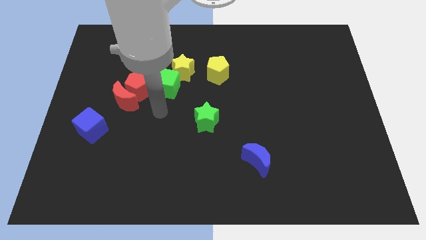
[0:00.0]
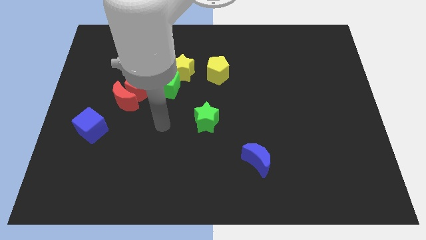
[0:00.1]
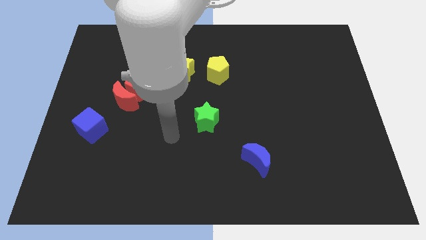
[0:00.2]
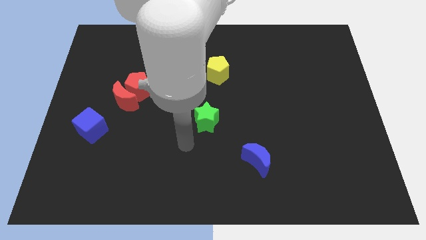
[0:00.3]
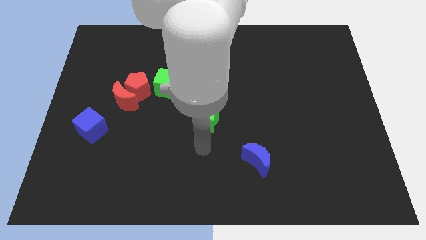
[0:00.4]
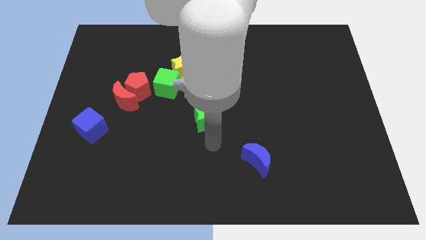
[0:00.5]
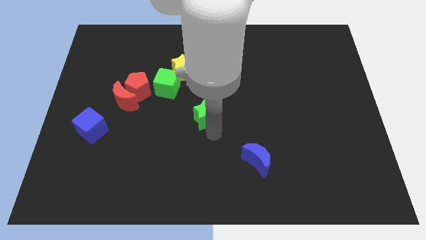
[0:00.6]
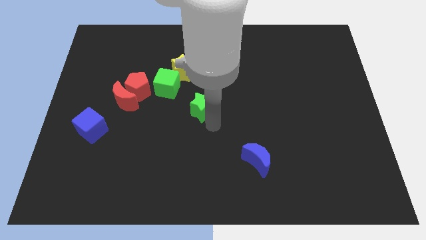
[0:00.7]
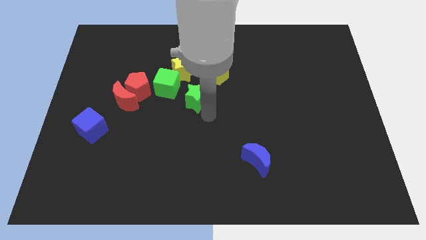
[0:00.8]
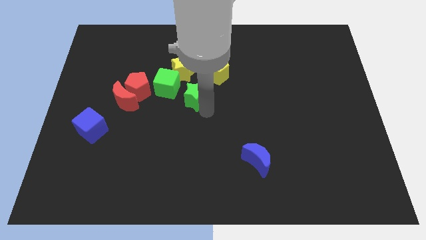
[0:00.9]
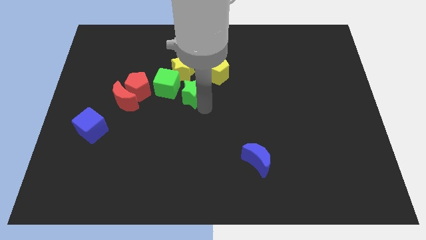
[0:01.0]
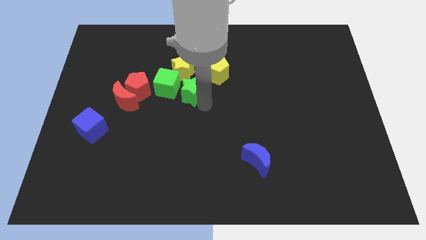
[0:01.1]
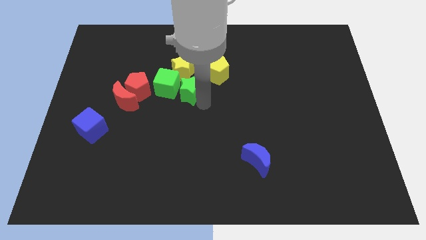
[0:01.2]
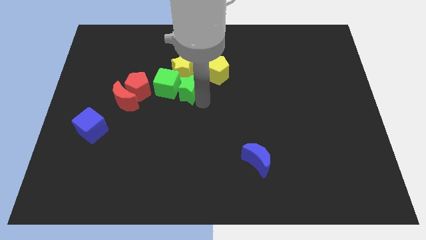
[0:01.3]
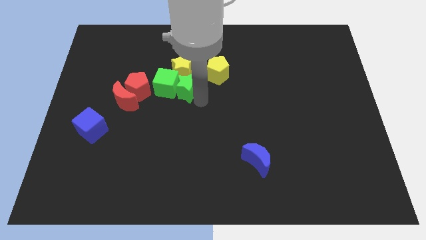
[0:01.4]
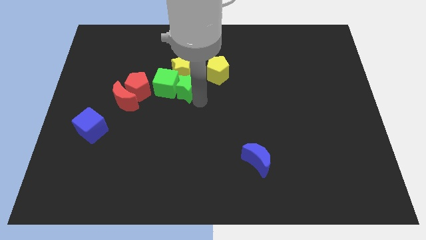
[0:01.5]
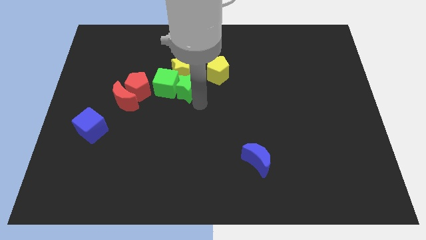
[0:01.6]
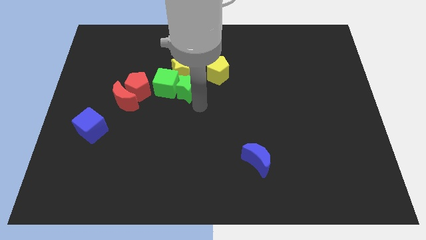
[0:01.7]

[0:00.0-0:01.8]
move the green star to the right of the green cube

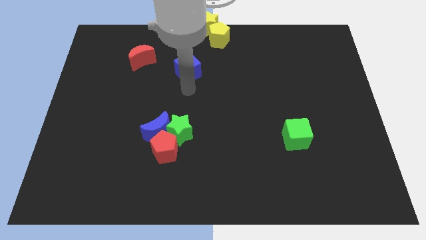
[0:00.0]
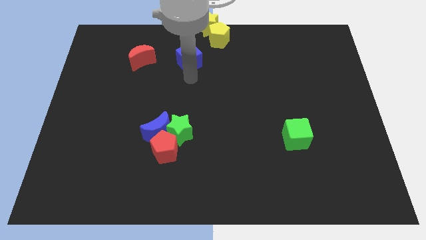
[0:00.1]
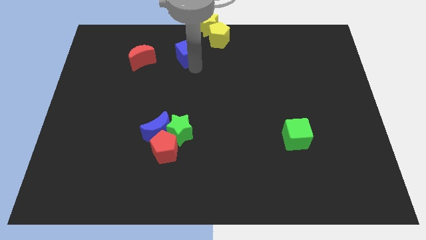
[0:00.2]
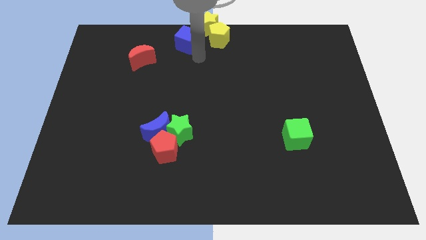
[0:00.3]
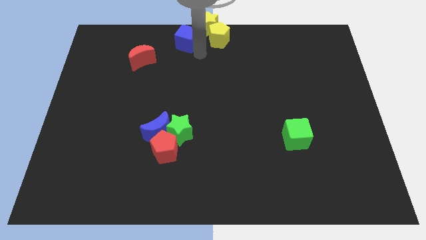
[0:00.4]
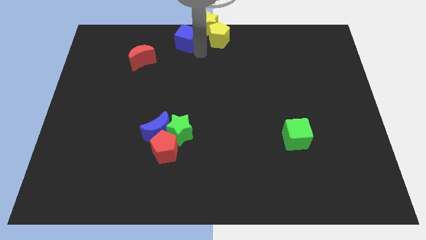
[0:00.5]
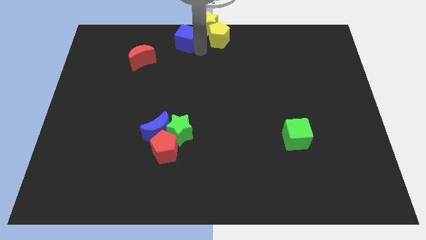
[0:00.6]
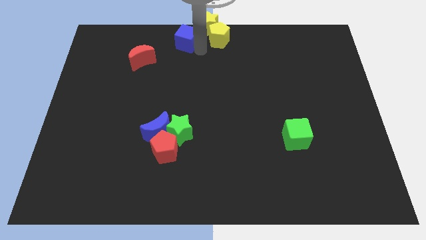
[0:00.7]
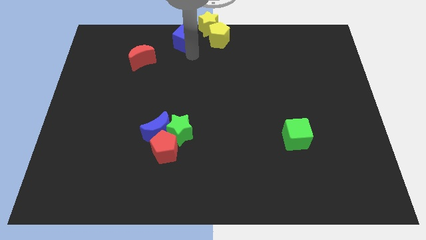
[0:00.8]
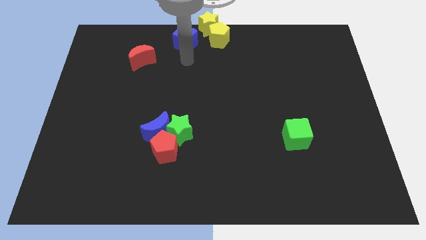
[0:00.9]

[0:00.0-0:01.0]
place the blue cube close to yellow blocks

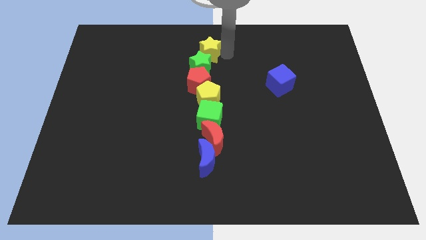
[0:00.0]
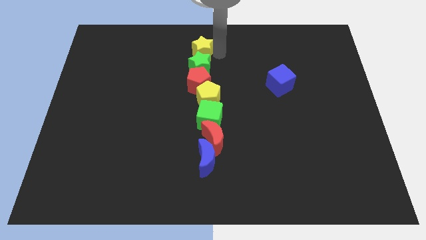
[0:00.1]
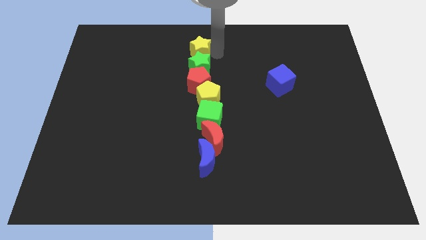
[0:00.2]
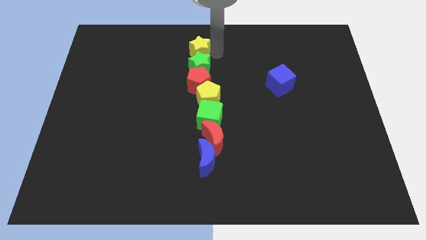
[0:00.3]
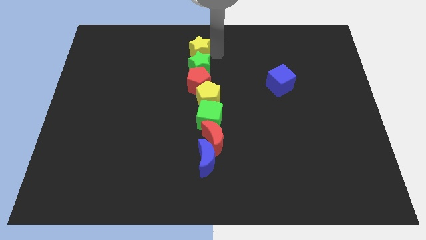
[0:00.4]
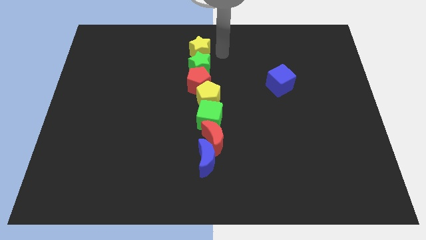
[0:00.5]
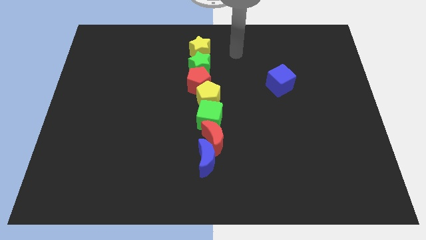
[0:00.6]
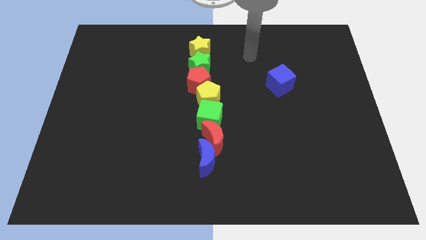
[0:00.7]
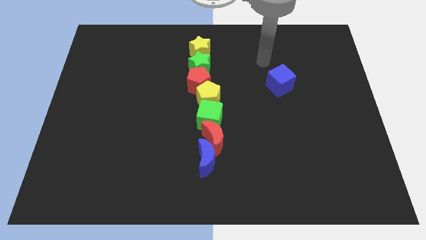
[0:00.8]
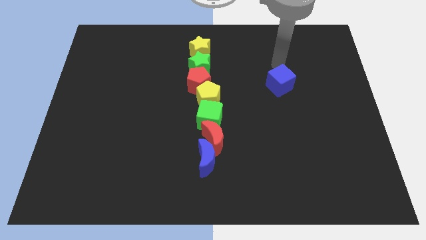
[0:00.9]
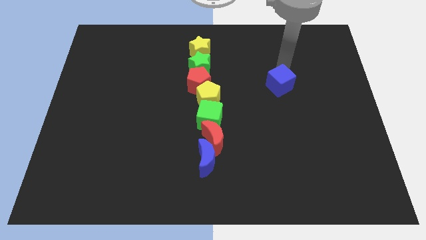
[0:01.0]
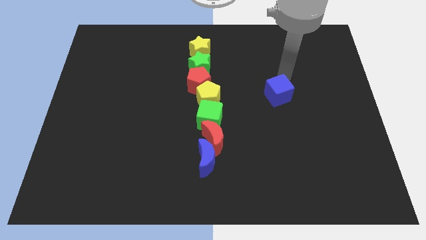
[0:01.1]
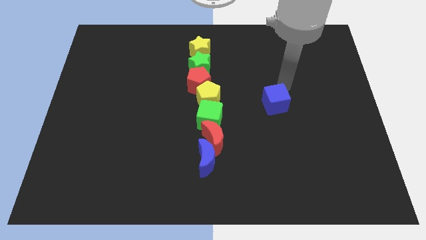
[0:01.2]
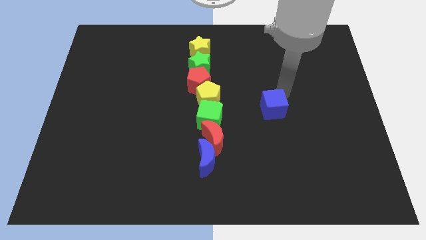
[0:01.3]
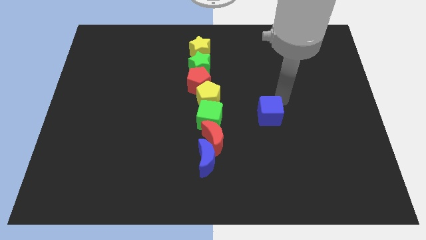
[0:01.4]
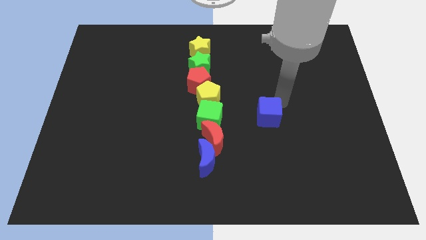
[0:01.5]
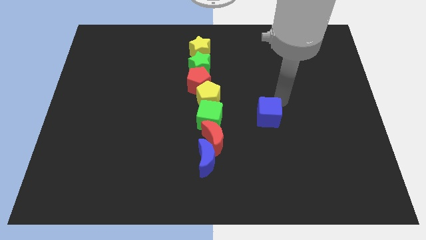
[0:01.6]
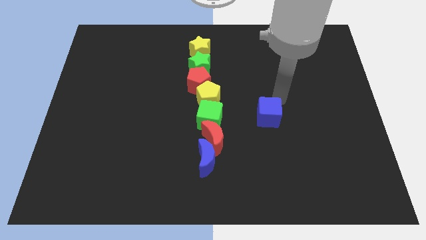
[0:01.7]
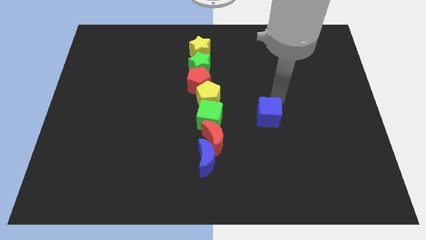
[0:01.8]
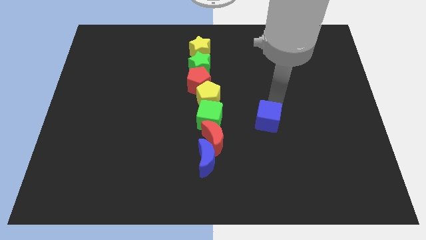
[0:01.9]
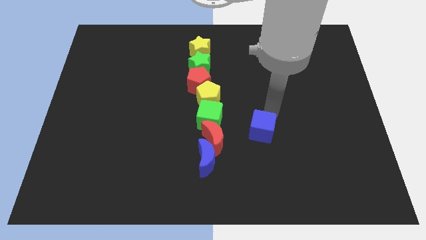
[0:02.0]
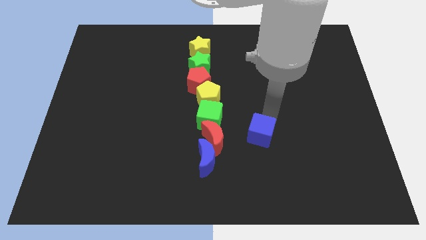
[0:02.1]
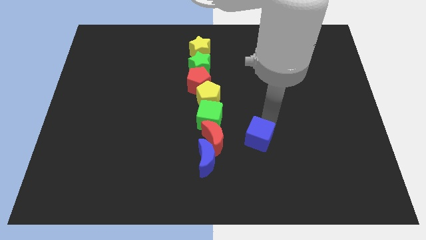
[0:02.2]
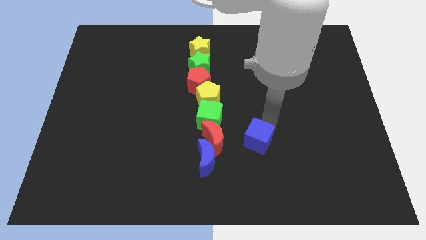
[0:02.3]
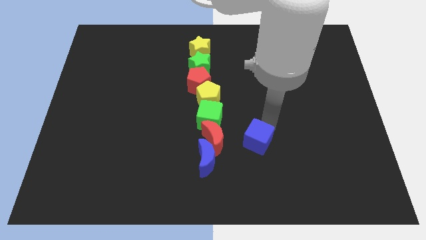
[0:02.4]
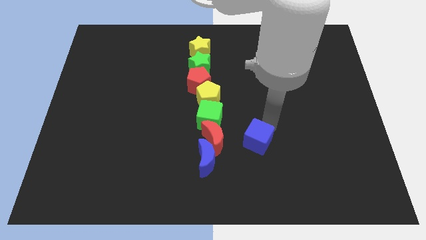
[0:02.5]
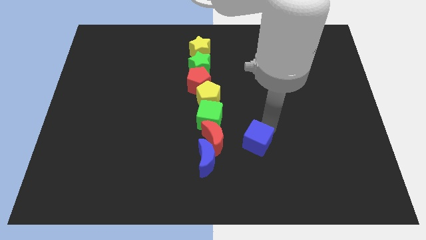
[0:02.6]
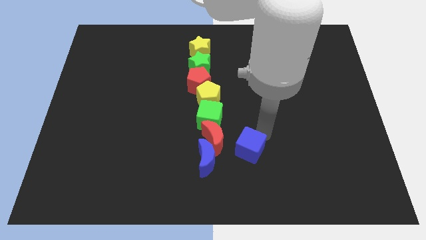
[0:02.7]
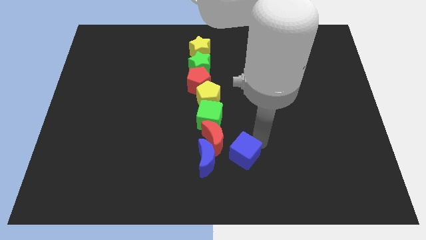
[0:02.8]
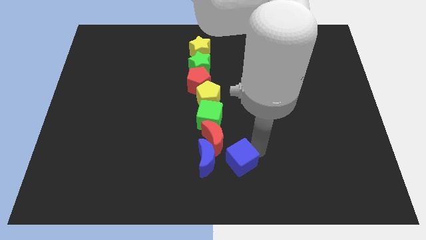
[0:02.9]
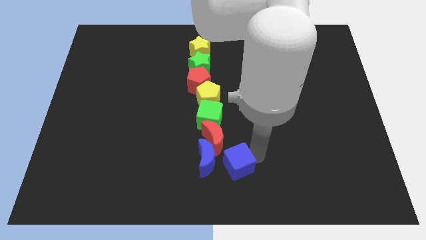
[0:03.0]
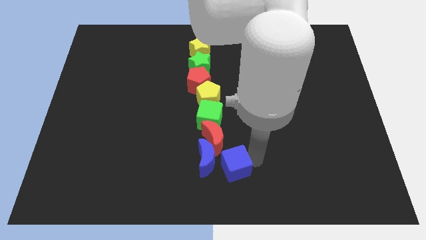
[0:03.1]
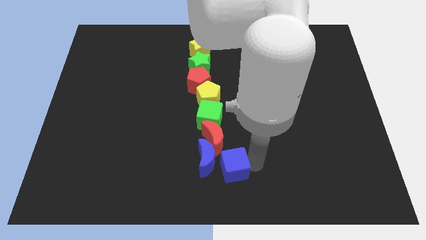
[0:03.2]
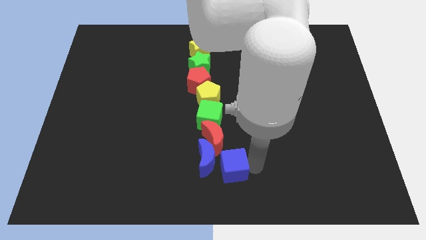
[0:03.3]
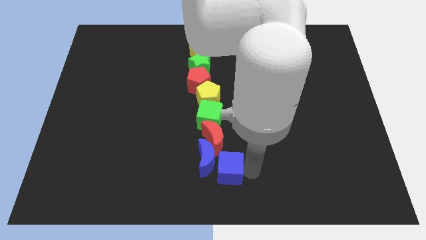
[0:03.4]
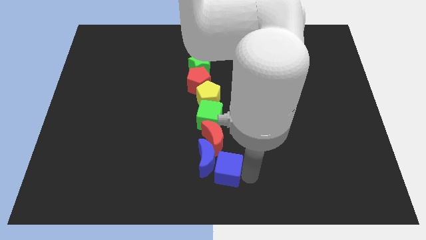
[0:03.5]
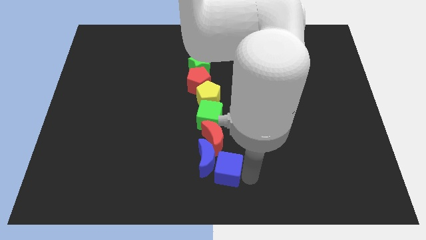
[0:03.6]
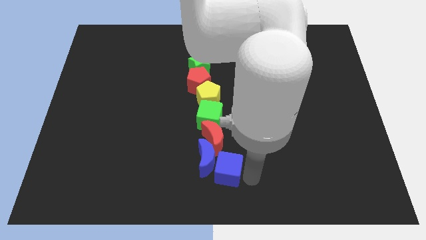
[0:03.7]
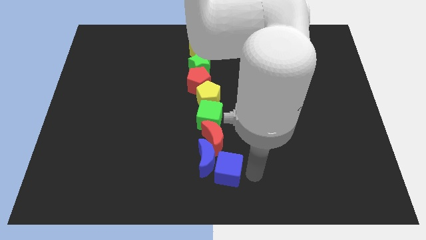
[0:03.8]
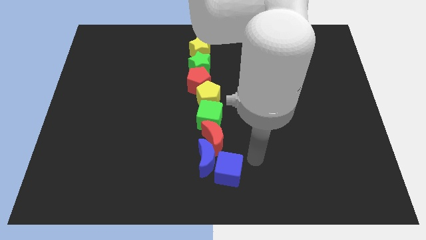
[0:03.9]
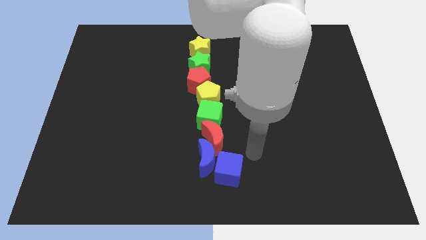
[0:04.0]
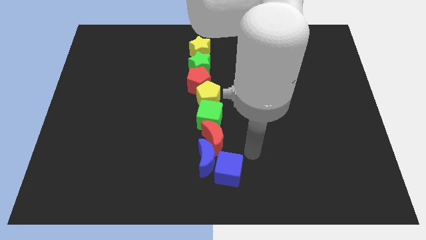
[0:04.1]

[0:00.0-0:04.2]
drag the blue cube right to the blue moon

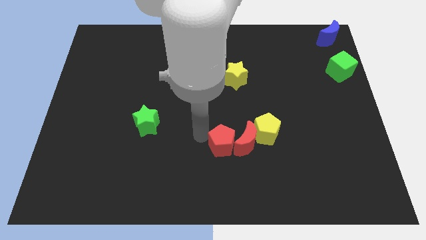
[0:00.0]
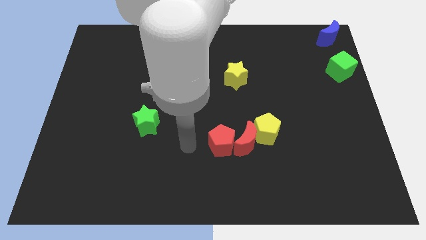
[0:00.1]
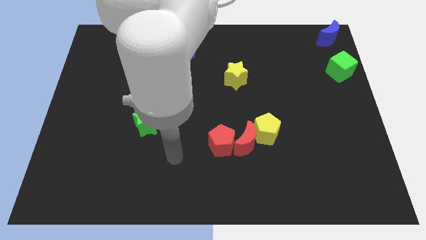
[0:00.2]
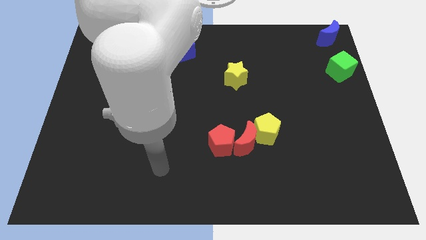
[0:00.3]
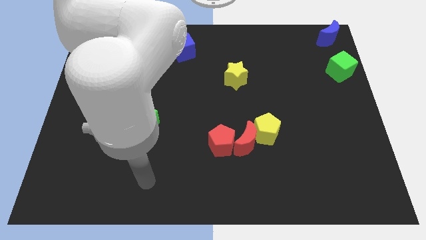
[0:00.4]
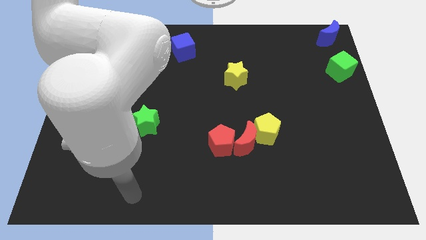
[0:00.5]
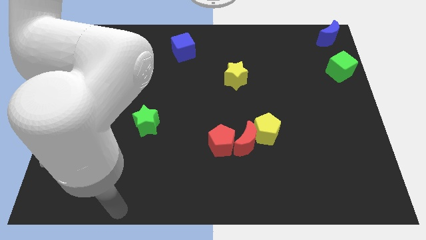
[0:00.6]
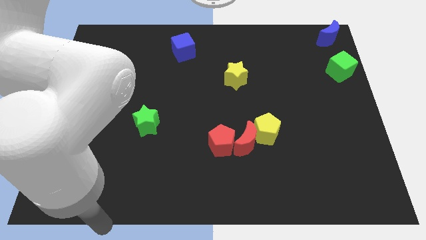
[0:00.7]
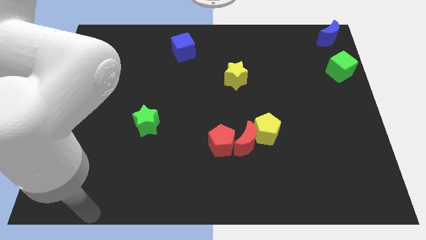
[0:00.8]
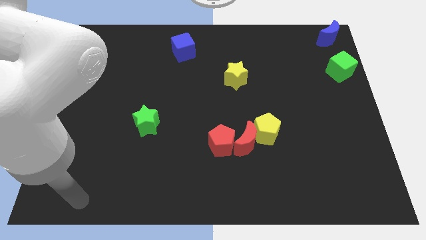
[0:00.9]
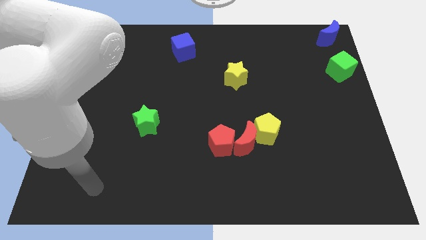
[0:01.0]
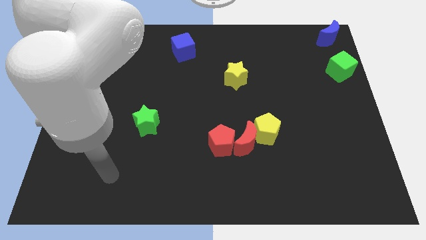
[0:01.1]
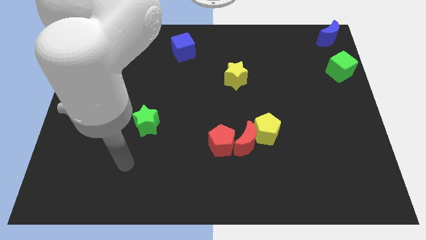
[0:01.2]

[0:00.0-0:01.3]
move your arm away from the red blocks

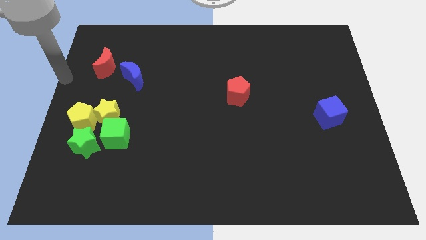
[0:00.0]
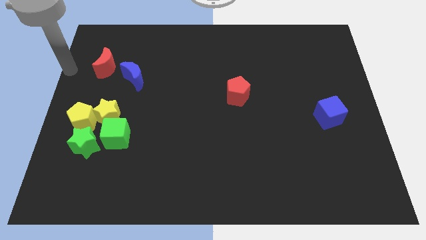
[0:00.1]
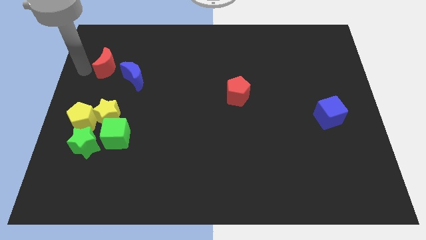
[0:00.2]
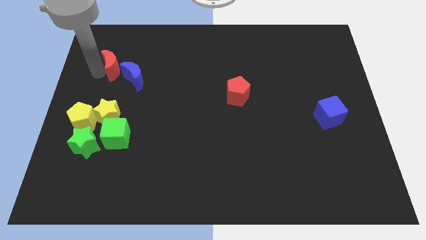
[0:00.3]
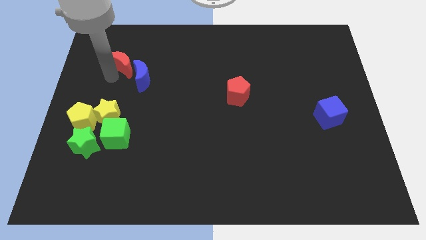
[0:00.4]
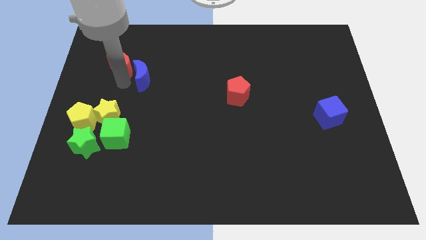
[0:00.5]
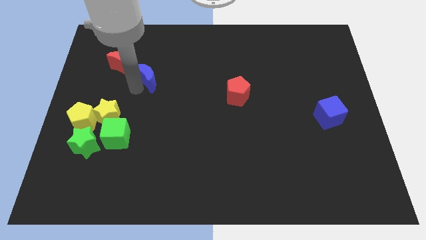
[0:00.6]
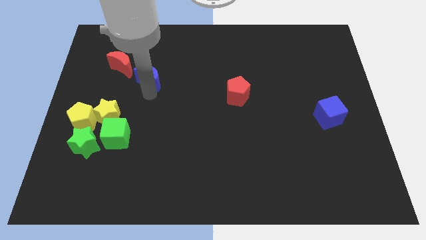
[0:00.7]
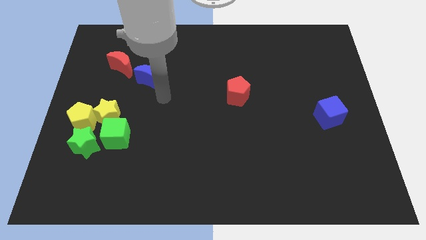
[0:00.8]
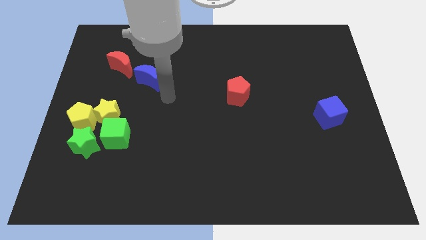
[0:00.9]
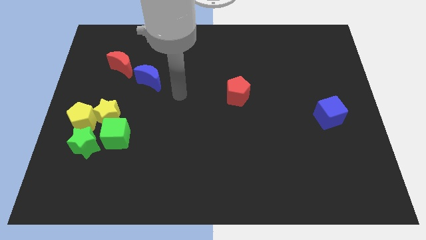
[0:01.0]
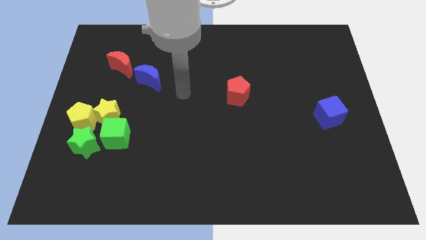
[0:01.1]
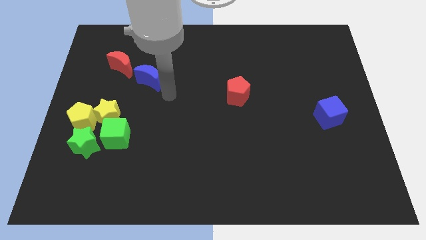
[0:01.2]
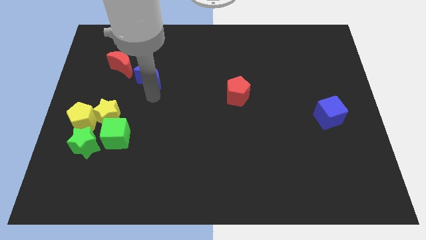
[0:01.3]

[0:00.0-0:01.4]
place both the crescent diagonal to each other
